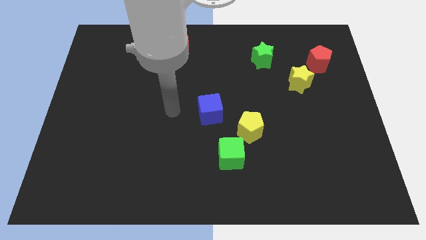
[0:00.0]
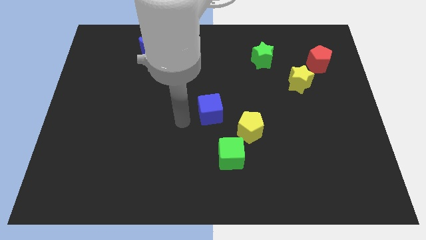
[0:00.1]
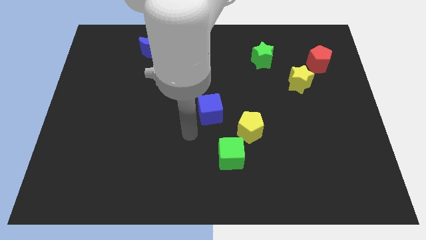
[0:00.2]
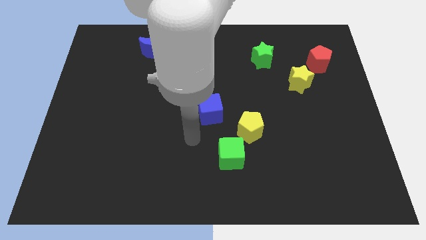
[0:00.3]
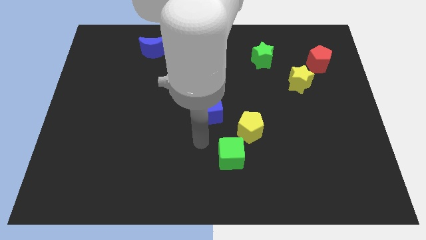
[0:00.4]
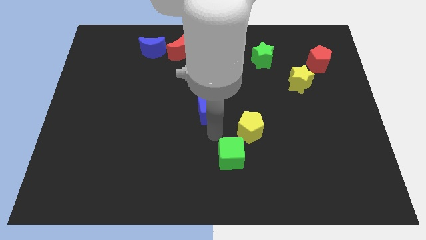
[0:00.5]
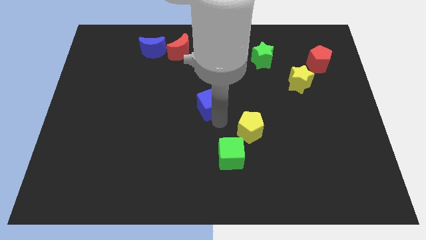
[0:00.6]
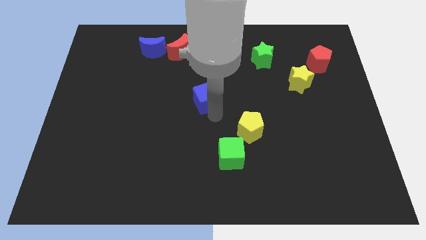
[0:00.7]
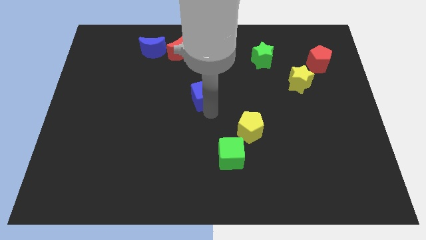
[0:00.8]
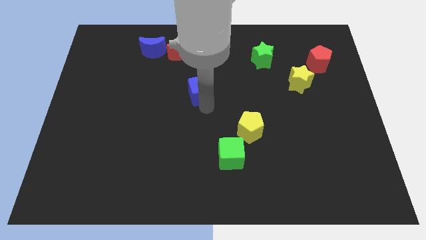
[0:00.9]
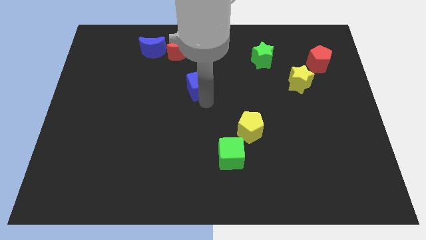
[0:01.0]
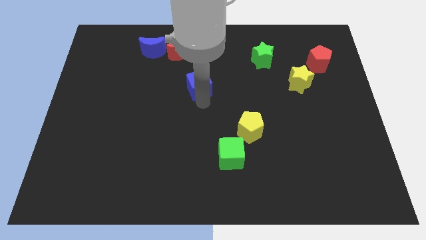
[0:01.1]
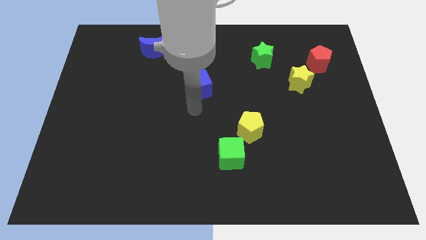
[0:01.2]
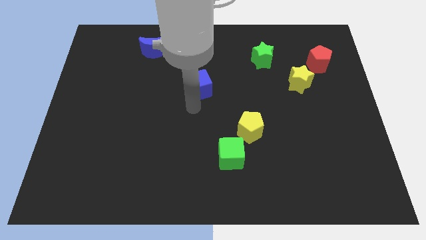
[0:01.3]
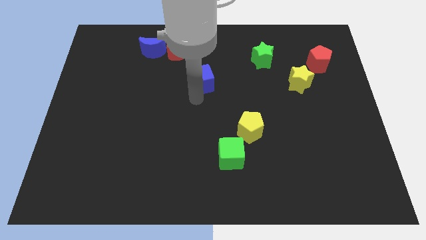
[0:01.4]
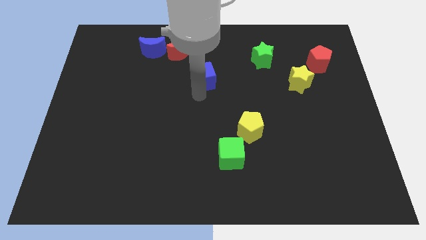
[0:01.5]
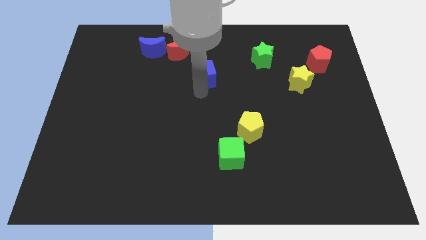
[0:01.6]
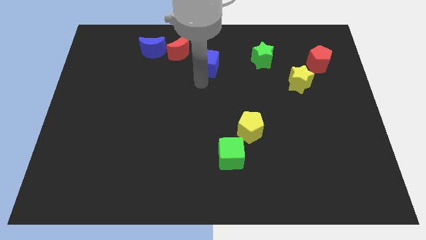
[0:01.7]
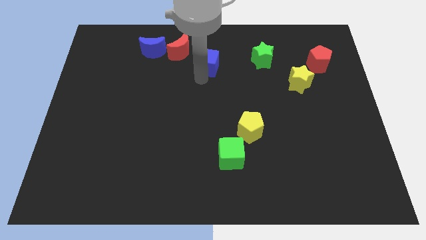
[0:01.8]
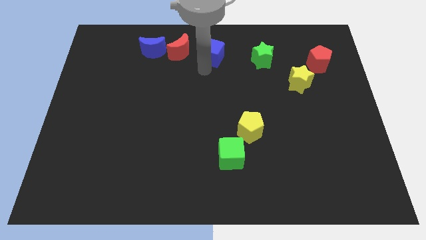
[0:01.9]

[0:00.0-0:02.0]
push the blue cube towards the red crescent

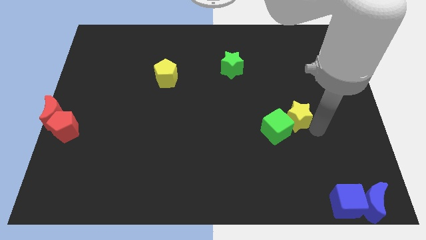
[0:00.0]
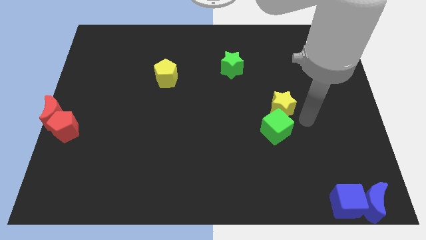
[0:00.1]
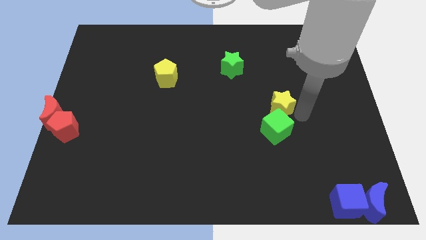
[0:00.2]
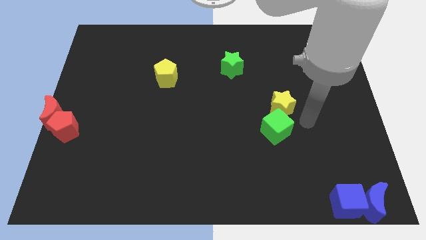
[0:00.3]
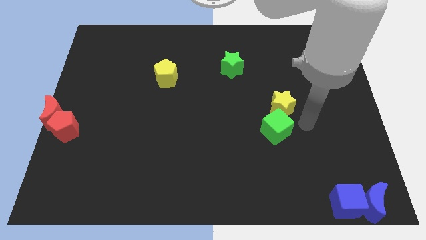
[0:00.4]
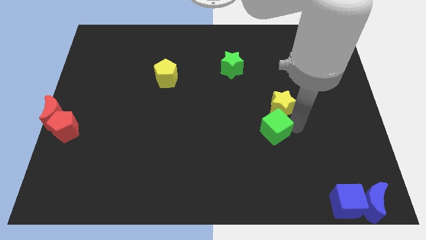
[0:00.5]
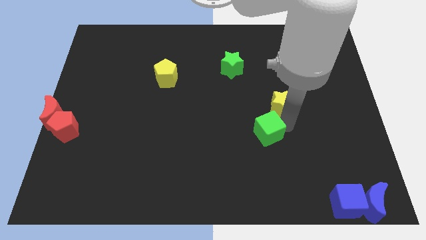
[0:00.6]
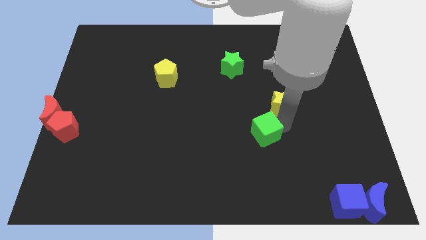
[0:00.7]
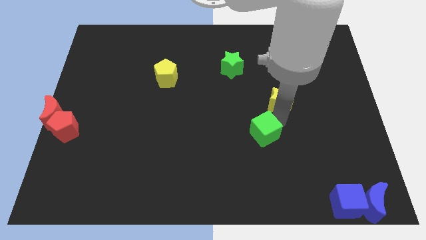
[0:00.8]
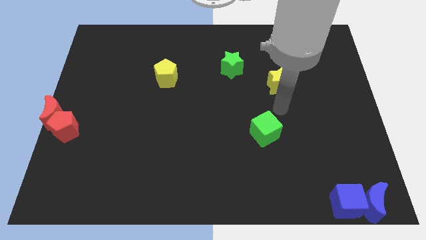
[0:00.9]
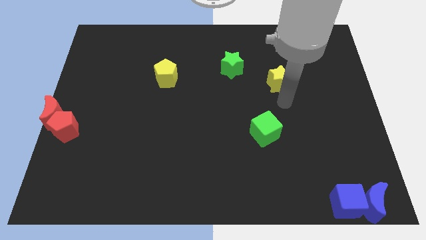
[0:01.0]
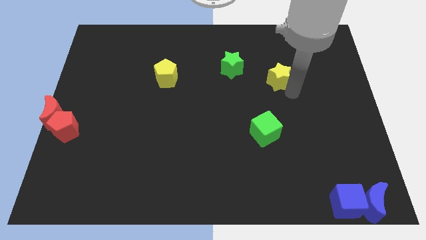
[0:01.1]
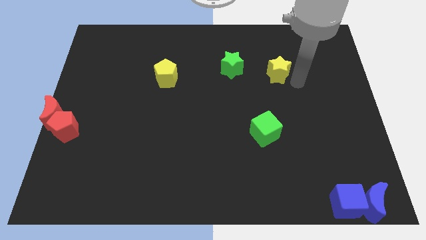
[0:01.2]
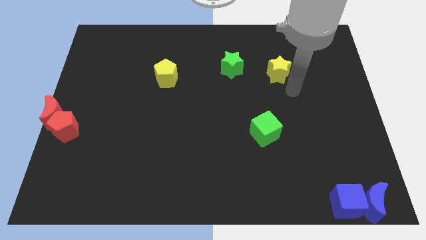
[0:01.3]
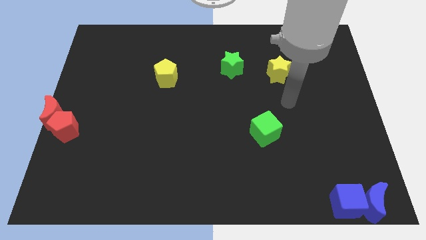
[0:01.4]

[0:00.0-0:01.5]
move the yellow star away from the green cube

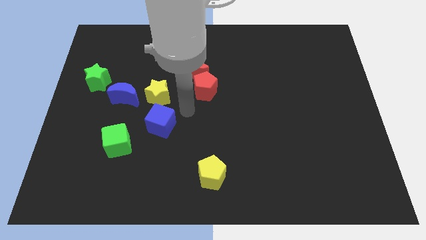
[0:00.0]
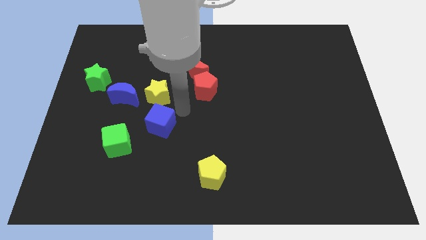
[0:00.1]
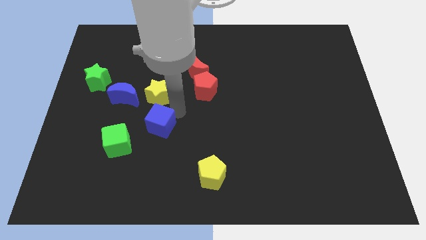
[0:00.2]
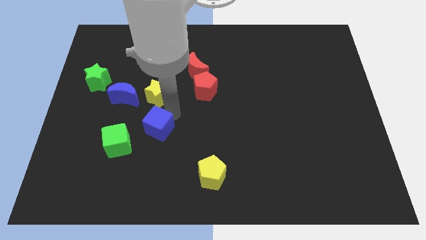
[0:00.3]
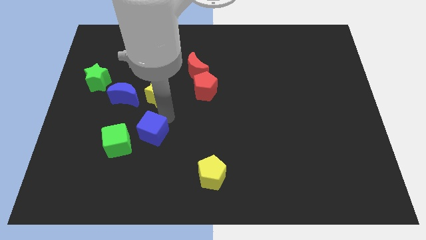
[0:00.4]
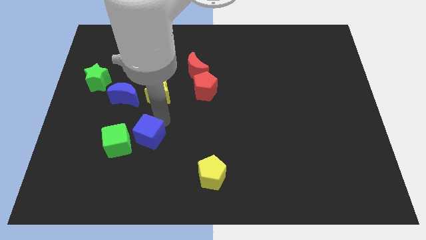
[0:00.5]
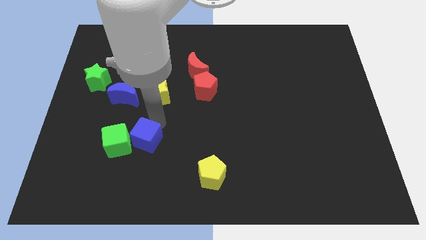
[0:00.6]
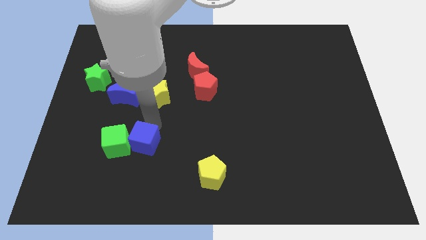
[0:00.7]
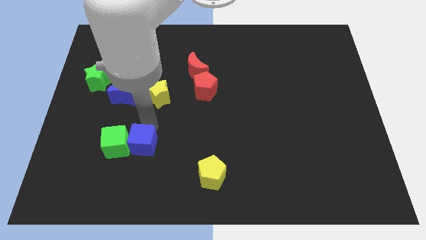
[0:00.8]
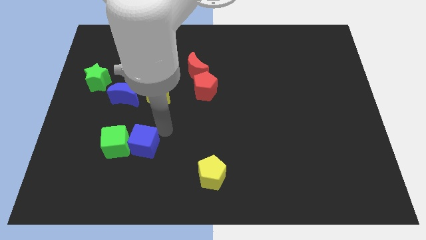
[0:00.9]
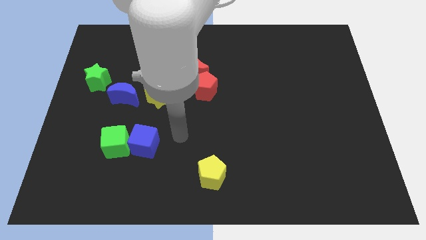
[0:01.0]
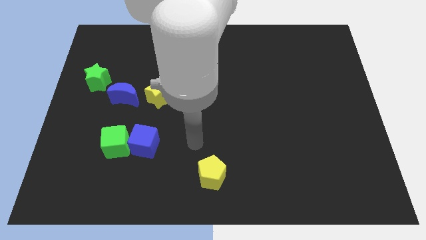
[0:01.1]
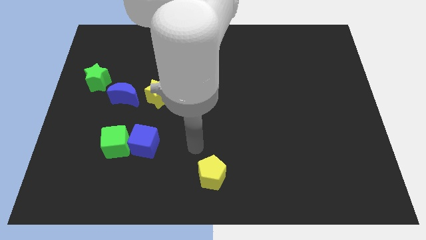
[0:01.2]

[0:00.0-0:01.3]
move the blue cube into green cube

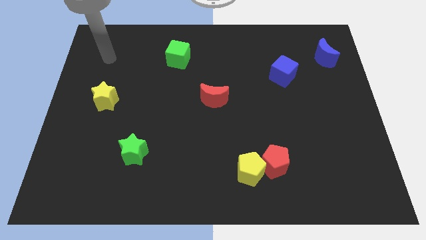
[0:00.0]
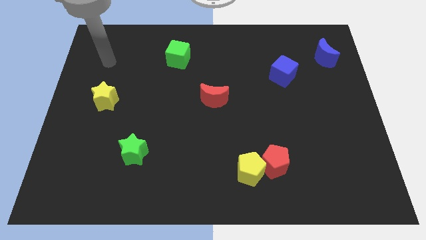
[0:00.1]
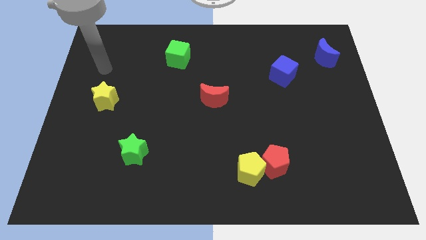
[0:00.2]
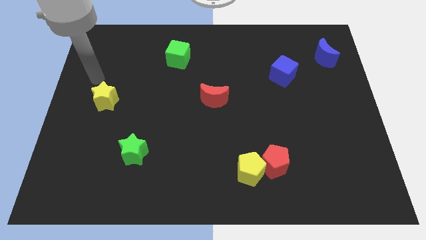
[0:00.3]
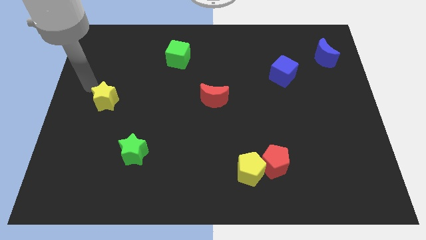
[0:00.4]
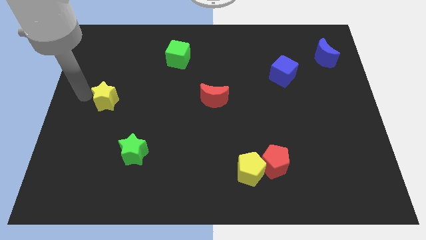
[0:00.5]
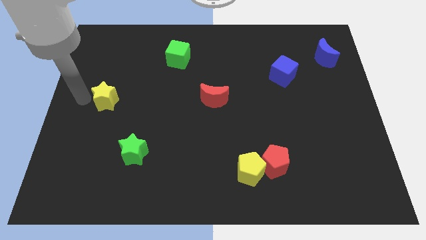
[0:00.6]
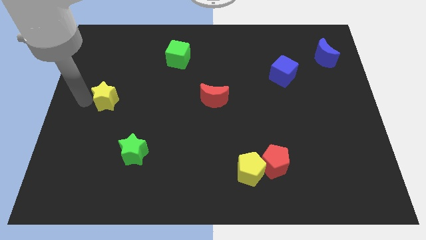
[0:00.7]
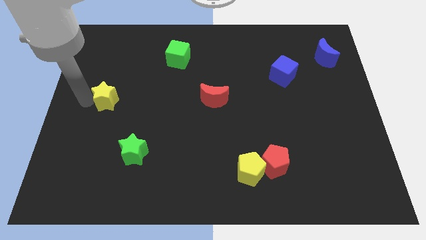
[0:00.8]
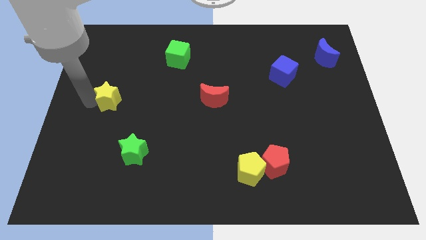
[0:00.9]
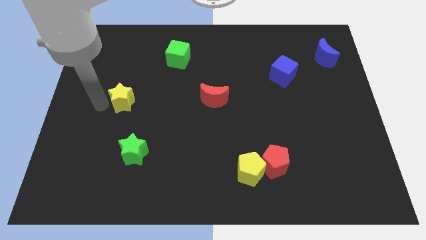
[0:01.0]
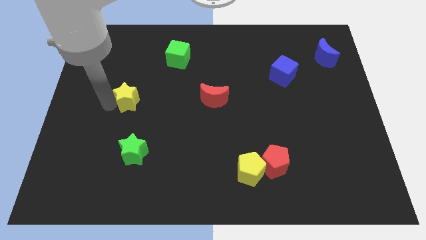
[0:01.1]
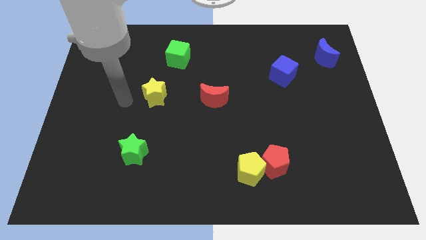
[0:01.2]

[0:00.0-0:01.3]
push yellow star to the right

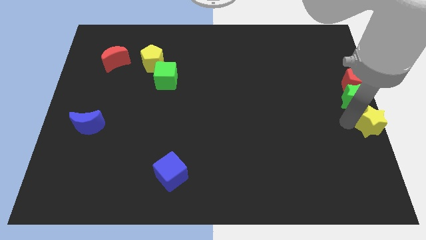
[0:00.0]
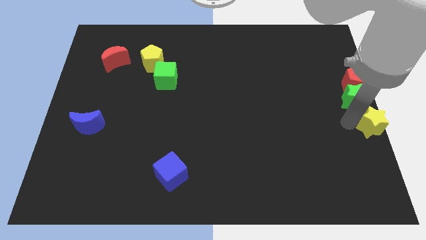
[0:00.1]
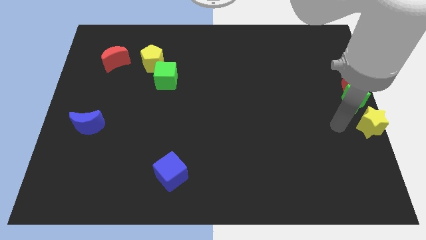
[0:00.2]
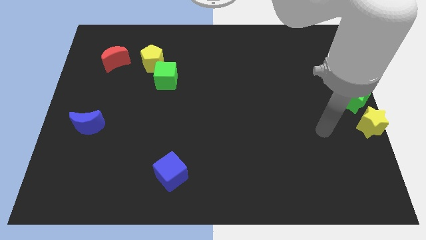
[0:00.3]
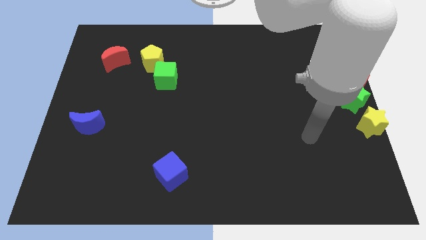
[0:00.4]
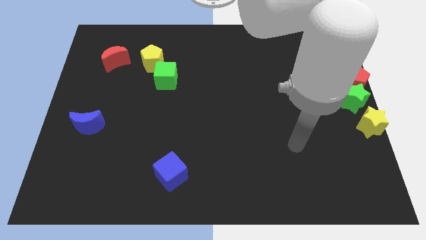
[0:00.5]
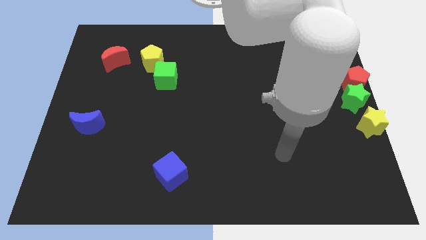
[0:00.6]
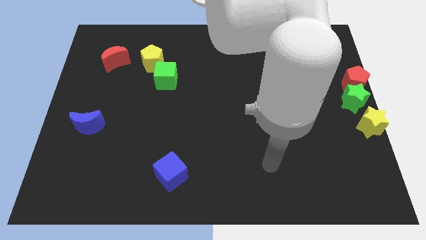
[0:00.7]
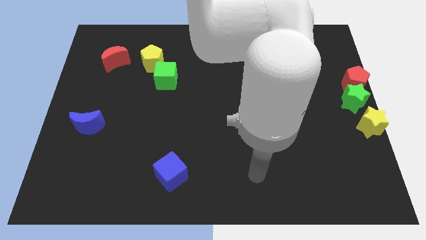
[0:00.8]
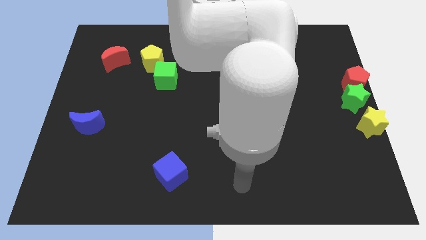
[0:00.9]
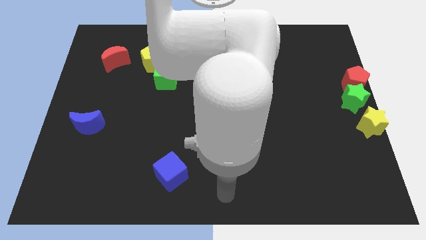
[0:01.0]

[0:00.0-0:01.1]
move the arm away from the yellow star

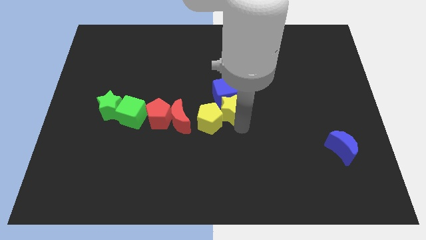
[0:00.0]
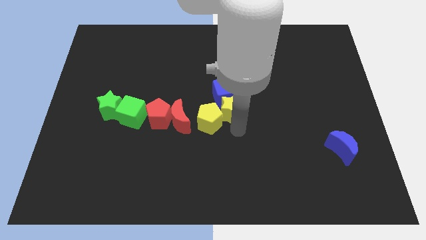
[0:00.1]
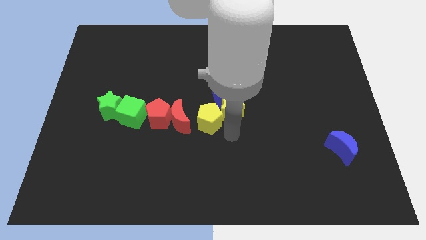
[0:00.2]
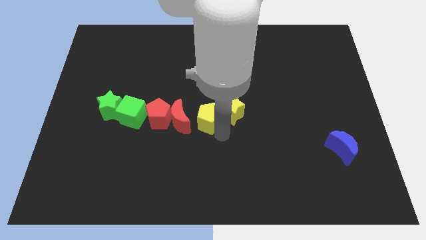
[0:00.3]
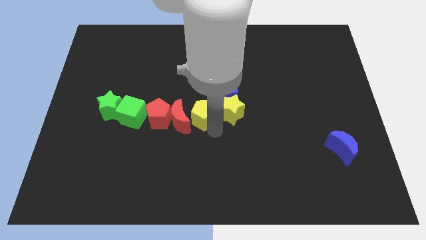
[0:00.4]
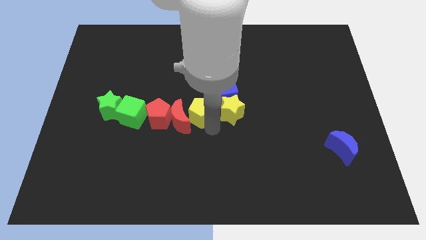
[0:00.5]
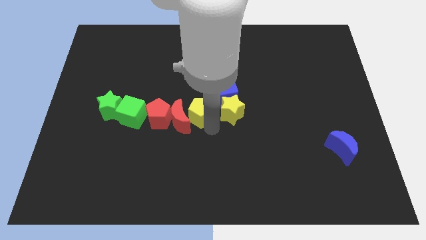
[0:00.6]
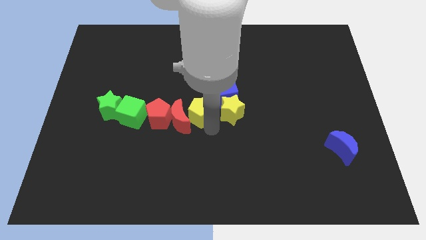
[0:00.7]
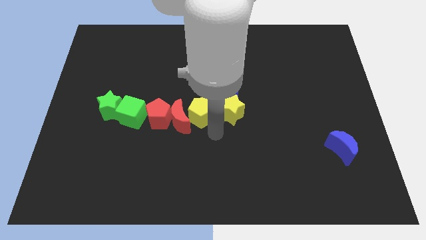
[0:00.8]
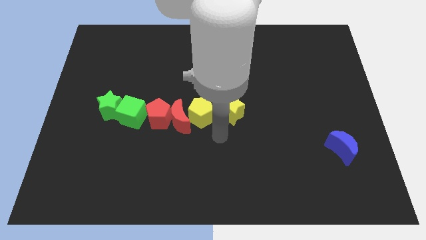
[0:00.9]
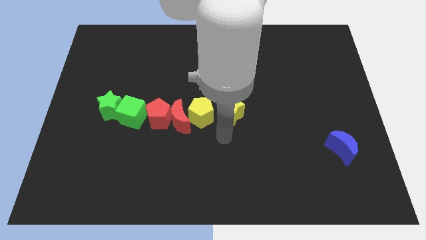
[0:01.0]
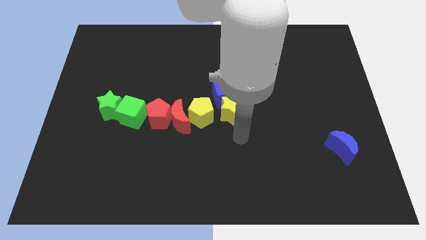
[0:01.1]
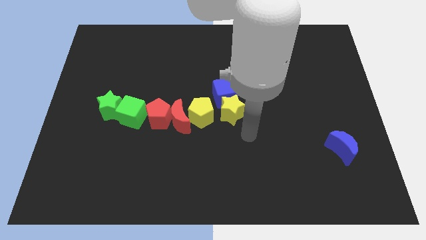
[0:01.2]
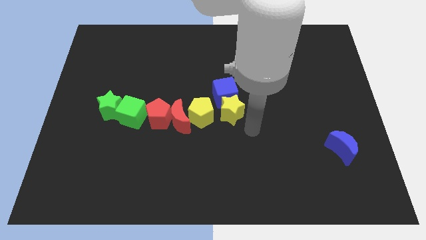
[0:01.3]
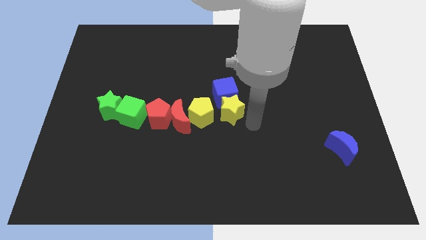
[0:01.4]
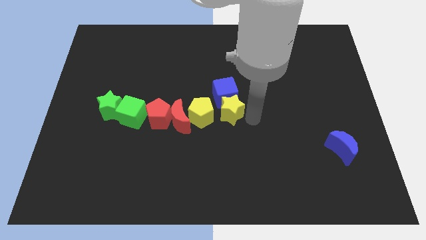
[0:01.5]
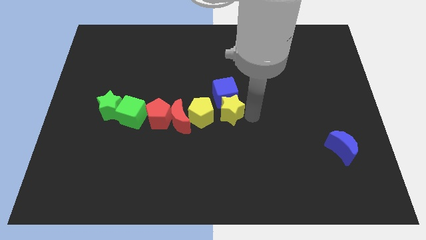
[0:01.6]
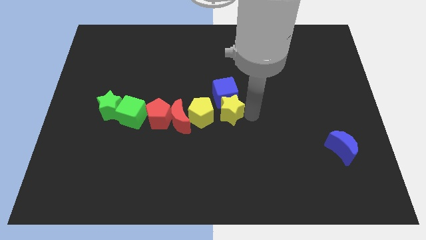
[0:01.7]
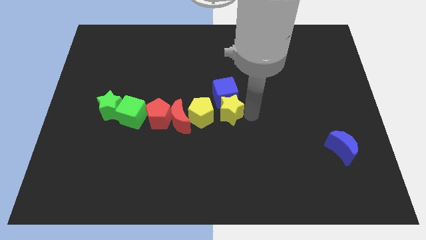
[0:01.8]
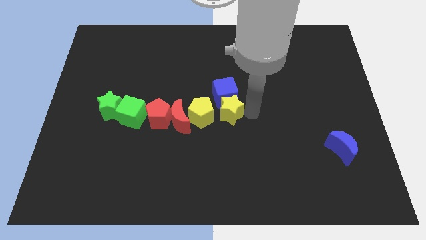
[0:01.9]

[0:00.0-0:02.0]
adjust the yellow pentagon between the yellow star and red moon
